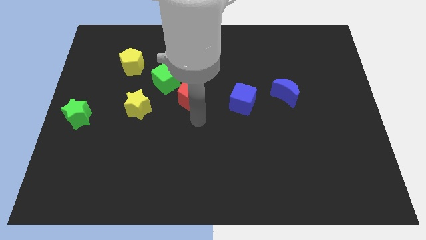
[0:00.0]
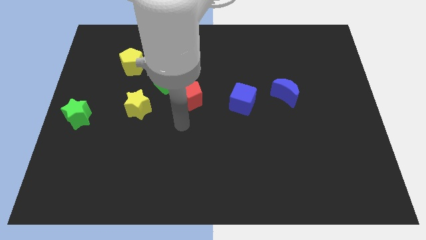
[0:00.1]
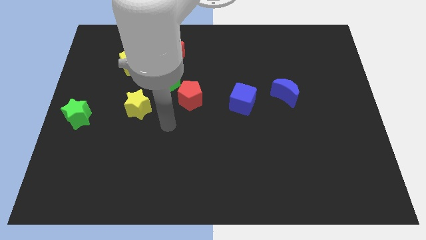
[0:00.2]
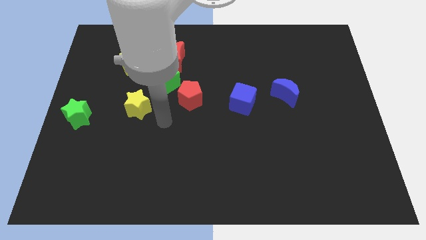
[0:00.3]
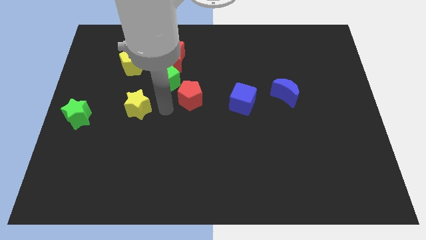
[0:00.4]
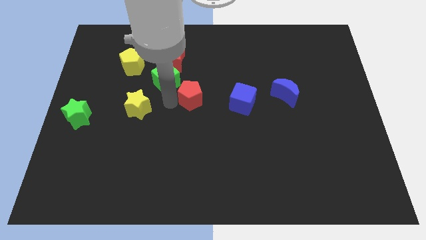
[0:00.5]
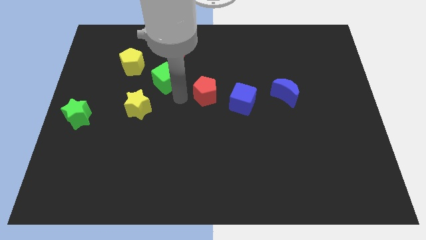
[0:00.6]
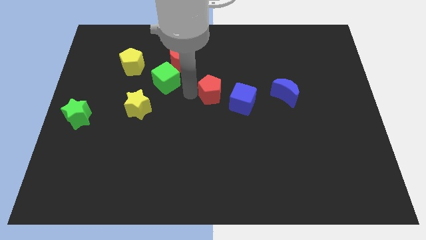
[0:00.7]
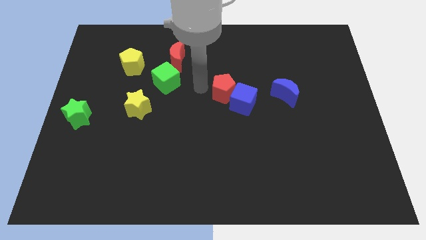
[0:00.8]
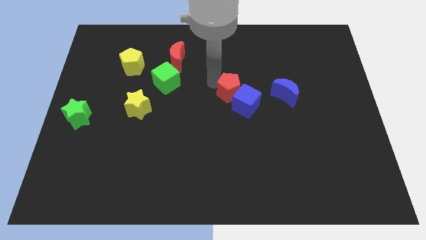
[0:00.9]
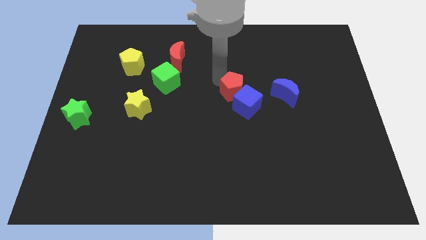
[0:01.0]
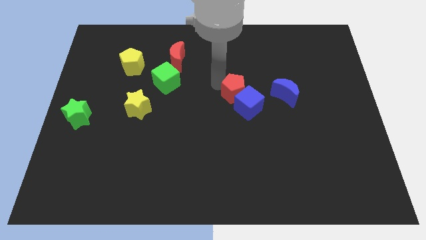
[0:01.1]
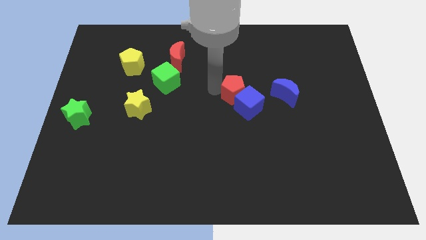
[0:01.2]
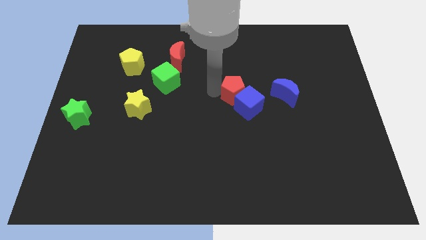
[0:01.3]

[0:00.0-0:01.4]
push the red pentagon into the blue cube

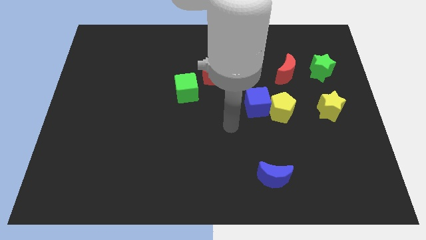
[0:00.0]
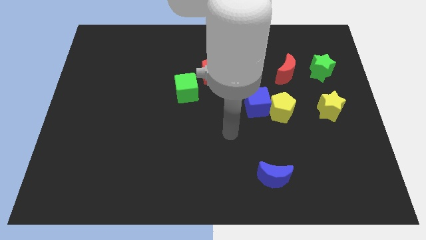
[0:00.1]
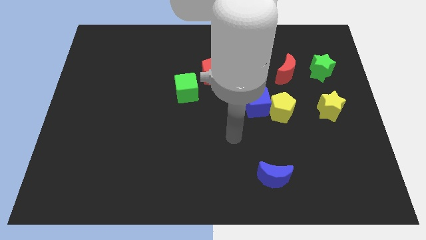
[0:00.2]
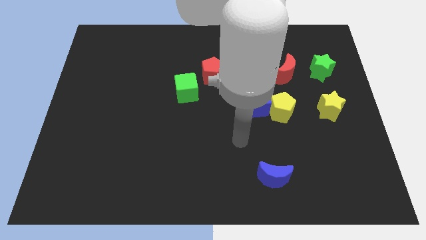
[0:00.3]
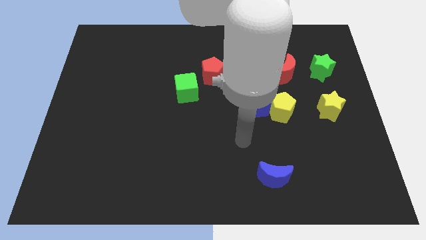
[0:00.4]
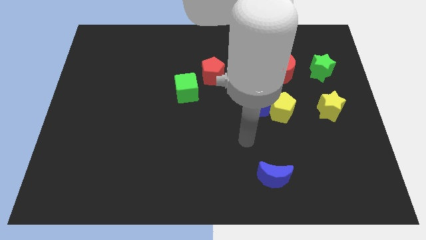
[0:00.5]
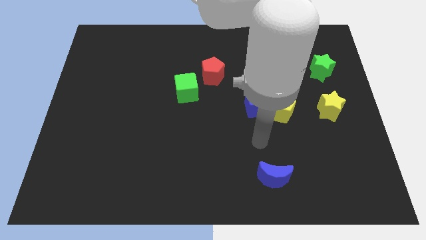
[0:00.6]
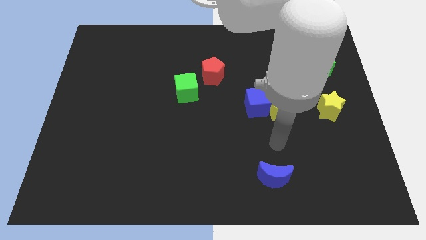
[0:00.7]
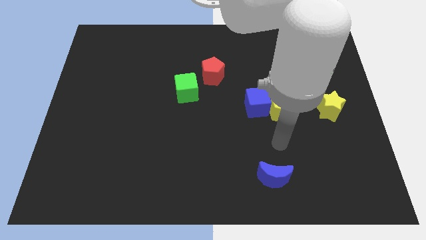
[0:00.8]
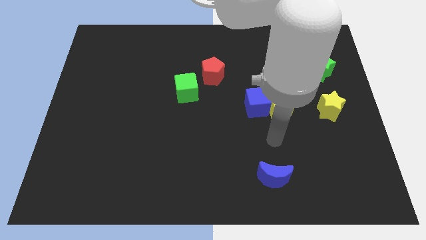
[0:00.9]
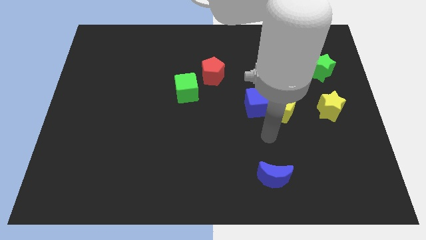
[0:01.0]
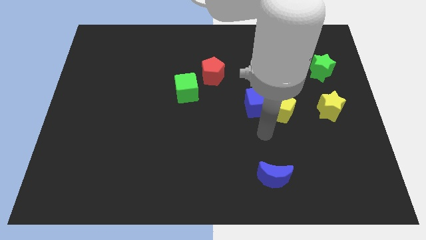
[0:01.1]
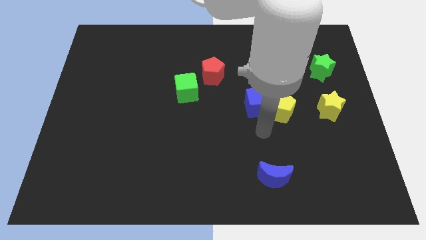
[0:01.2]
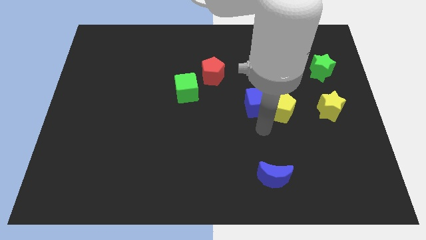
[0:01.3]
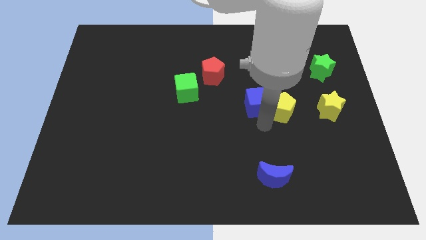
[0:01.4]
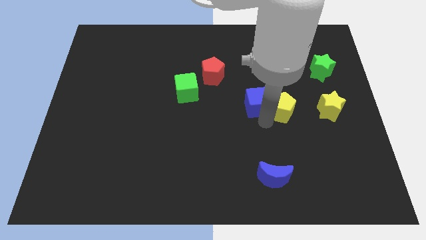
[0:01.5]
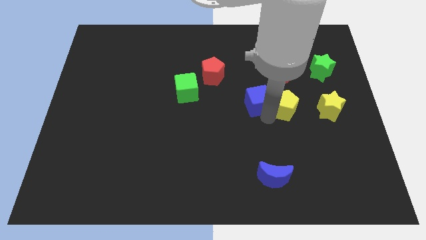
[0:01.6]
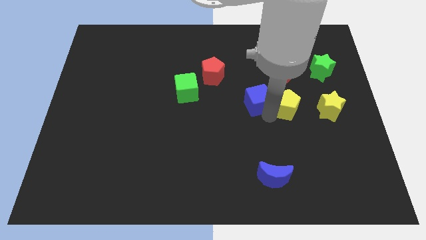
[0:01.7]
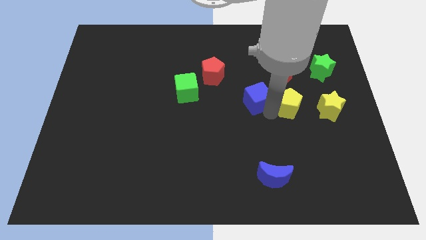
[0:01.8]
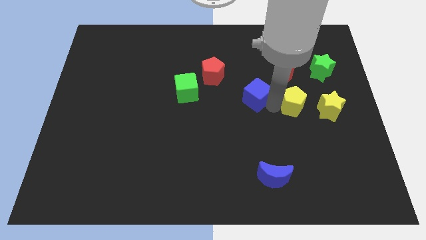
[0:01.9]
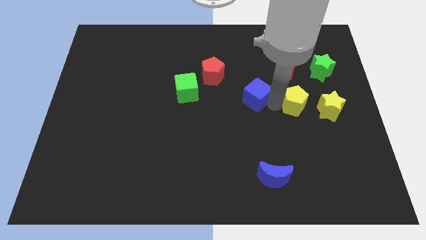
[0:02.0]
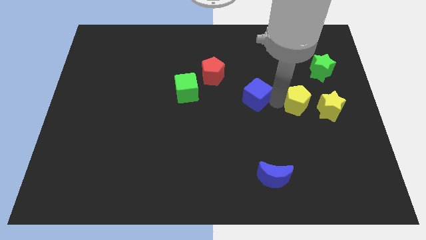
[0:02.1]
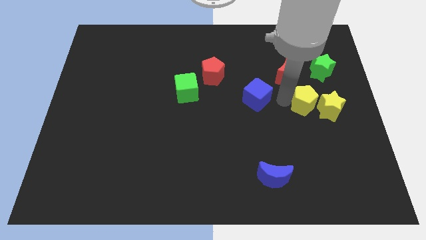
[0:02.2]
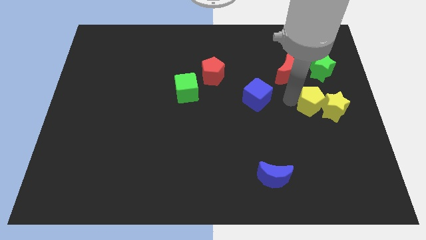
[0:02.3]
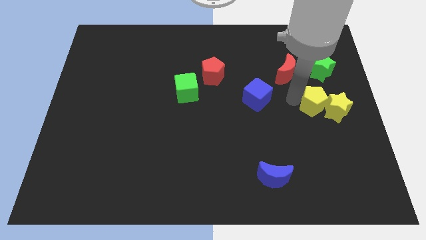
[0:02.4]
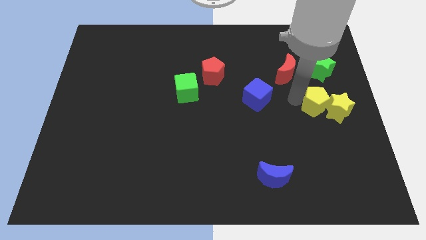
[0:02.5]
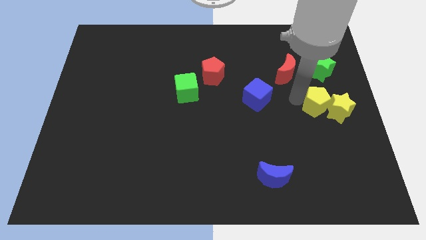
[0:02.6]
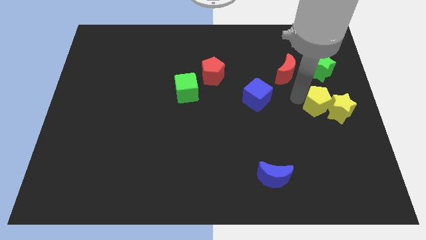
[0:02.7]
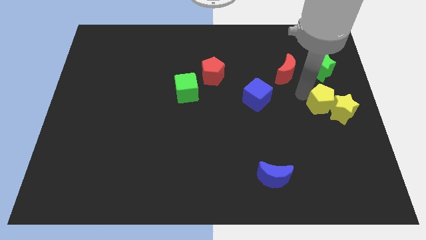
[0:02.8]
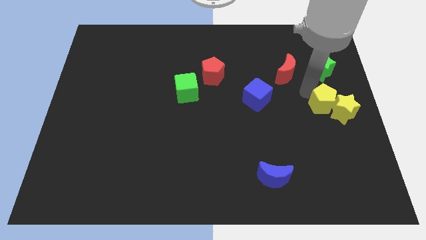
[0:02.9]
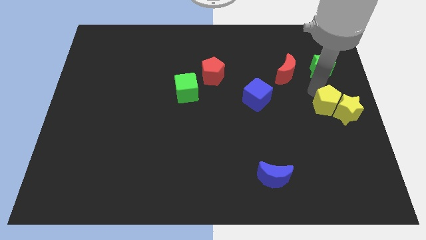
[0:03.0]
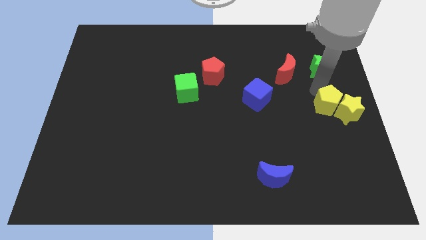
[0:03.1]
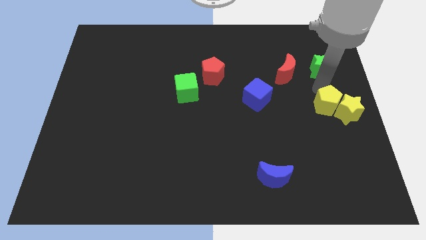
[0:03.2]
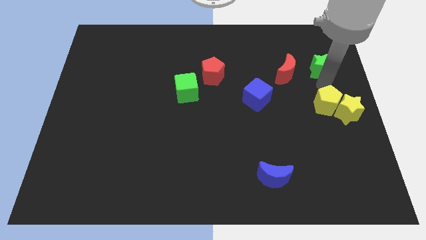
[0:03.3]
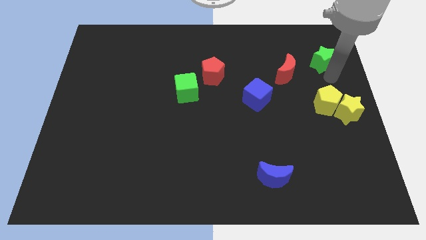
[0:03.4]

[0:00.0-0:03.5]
push the yellow pentagon and the yellow star to the right of the board

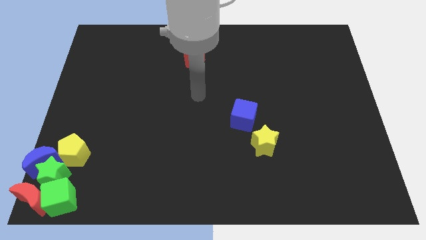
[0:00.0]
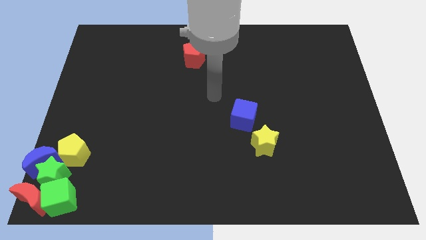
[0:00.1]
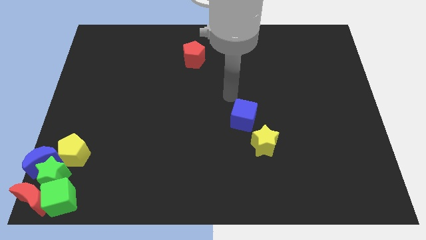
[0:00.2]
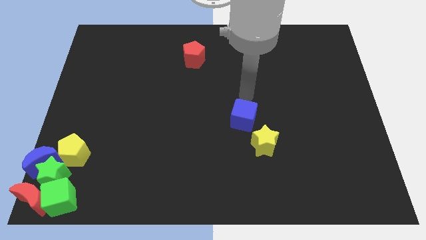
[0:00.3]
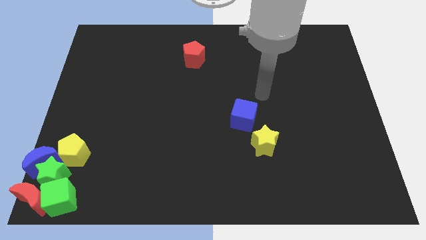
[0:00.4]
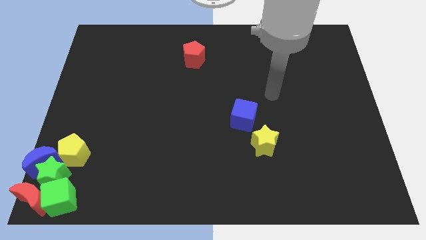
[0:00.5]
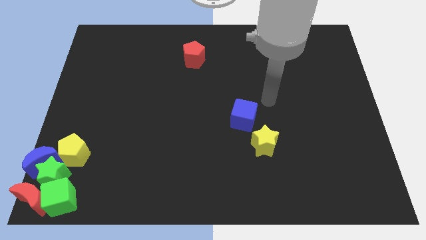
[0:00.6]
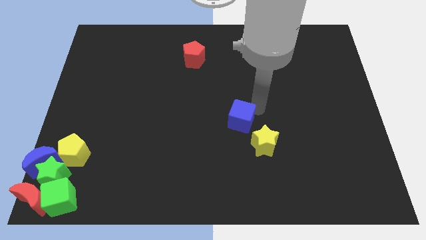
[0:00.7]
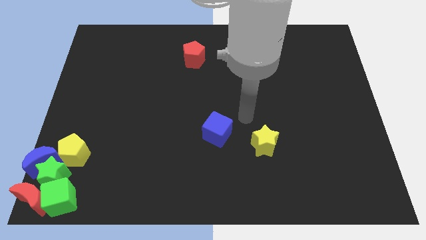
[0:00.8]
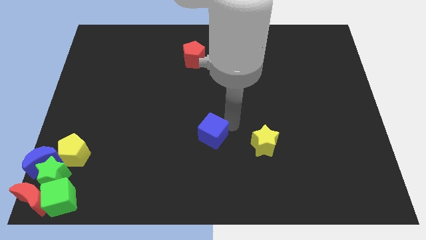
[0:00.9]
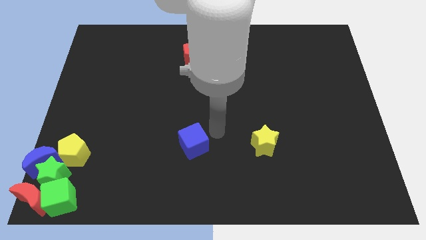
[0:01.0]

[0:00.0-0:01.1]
place the blue cube left to the yellow star

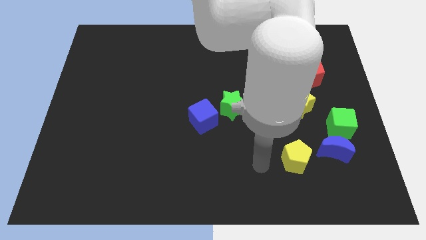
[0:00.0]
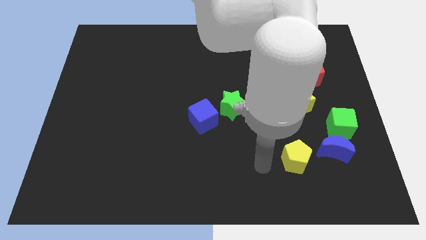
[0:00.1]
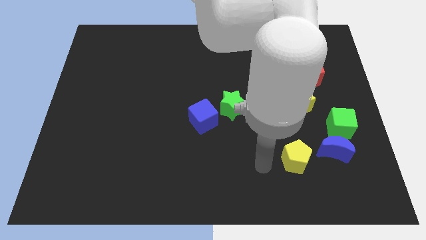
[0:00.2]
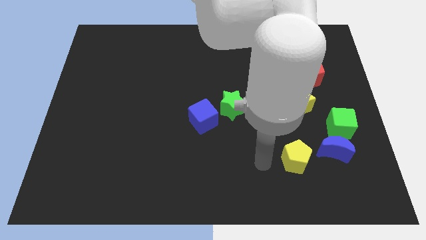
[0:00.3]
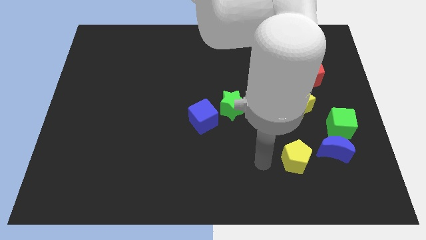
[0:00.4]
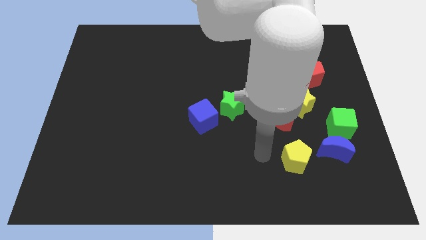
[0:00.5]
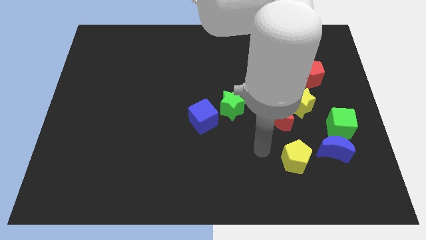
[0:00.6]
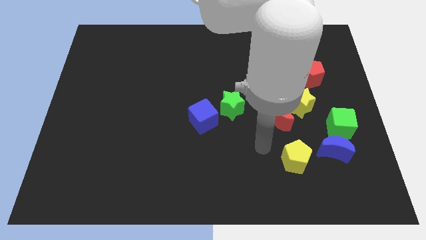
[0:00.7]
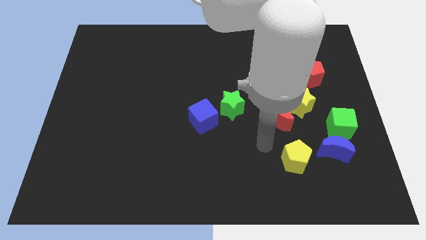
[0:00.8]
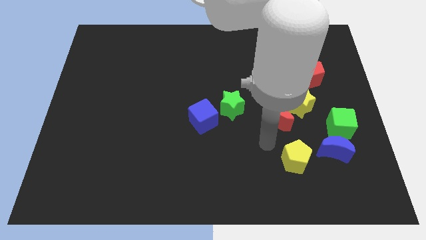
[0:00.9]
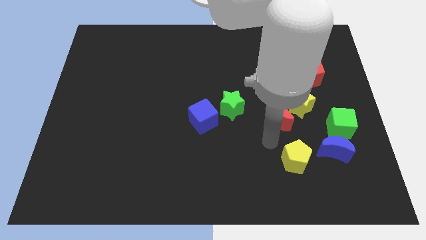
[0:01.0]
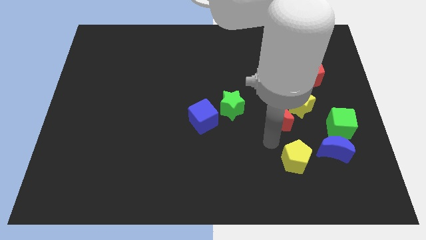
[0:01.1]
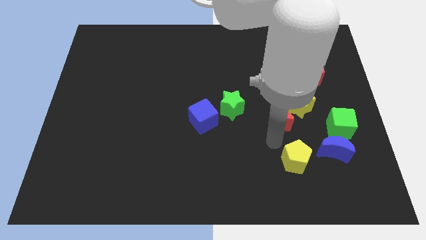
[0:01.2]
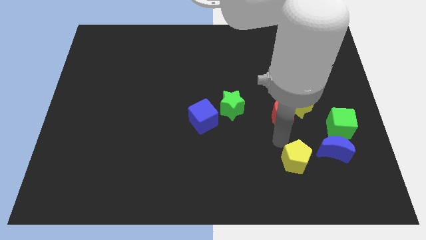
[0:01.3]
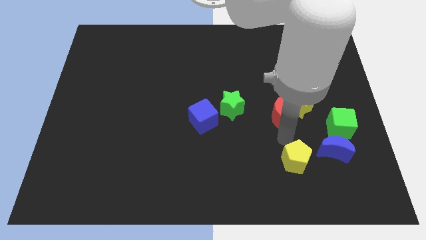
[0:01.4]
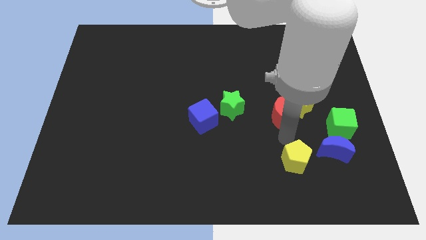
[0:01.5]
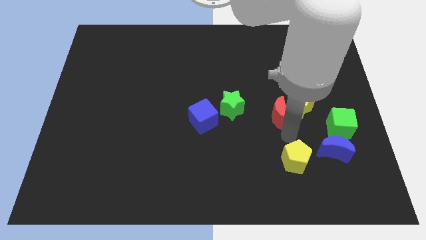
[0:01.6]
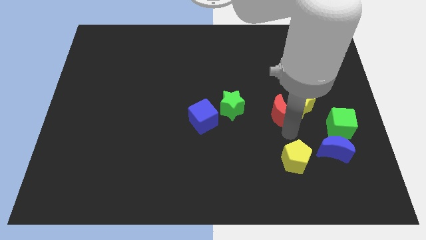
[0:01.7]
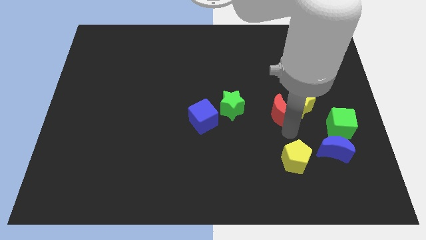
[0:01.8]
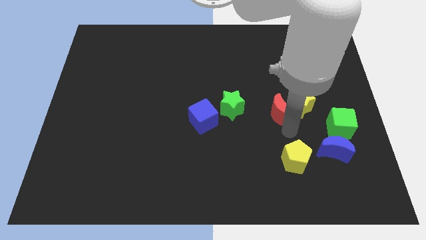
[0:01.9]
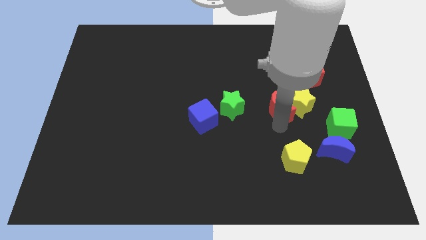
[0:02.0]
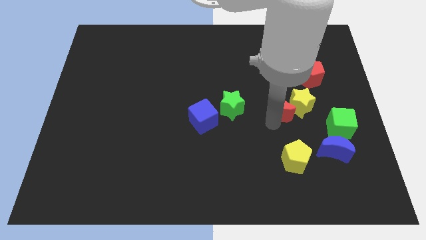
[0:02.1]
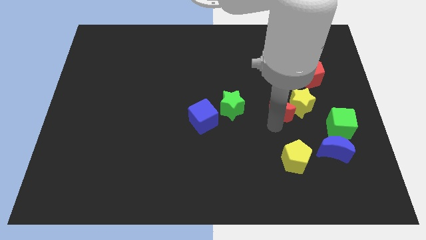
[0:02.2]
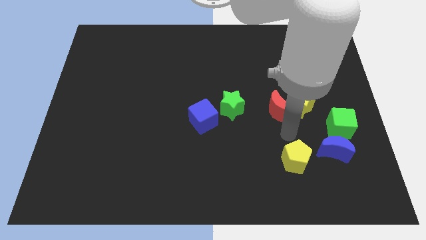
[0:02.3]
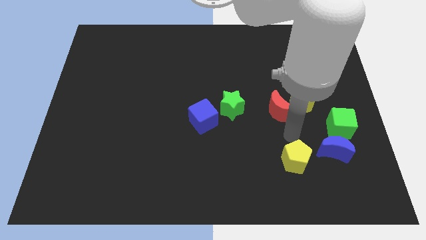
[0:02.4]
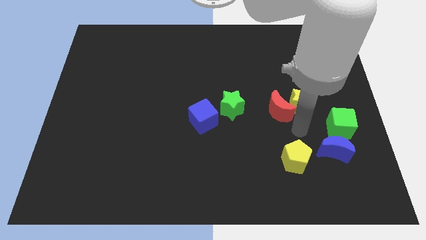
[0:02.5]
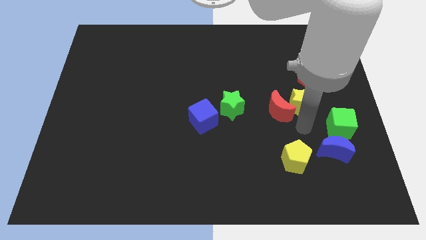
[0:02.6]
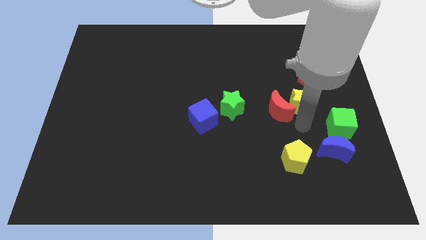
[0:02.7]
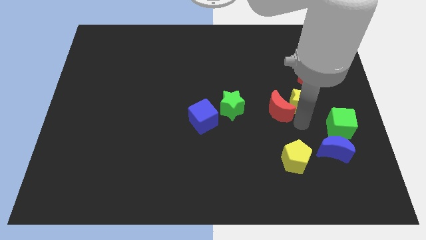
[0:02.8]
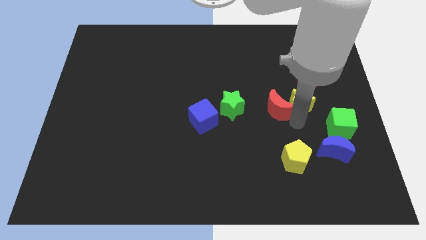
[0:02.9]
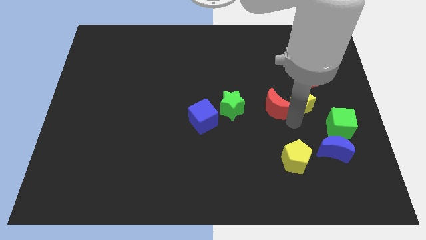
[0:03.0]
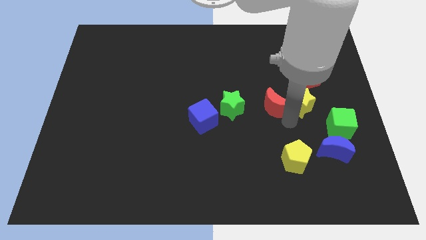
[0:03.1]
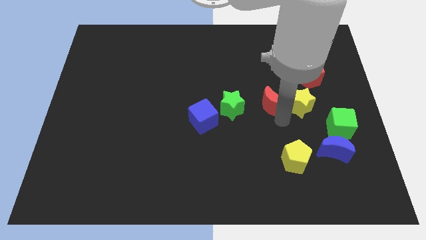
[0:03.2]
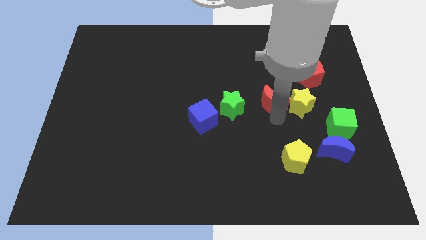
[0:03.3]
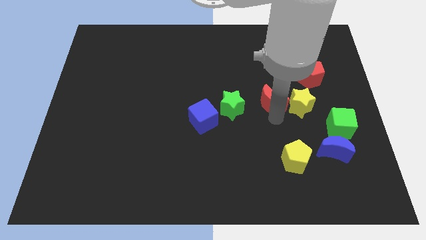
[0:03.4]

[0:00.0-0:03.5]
move the red crescent to the left side of the yellow star
